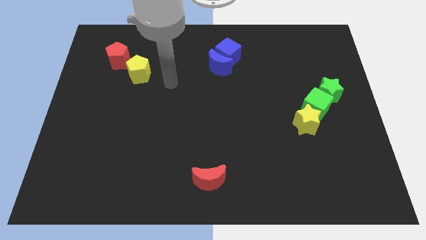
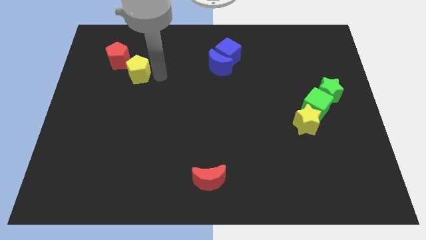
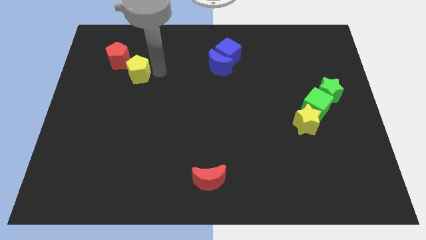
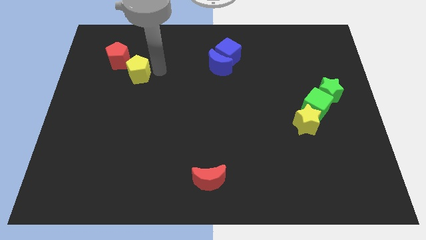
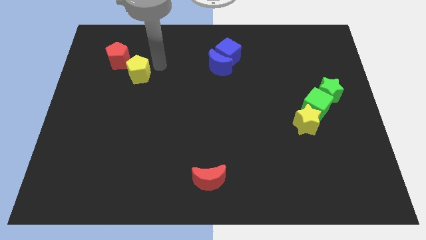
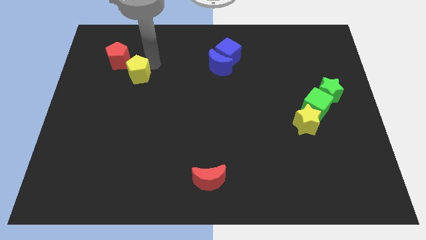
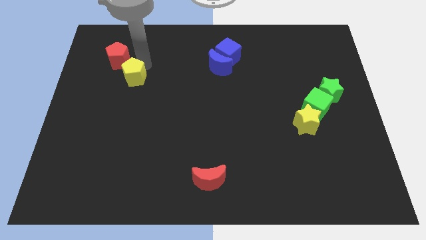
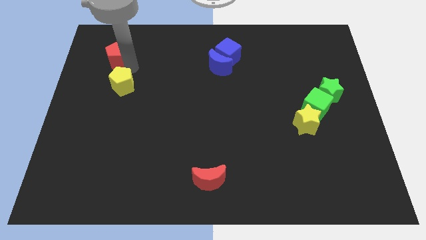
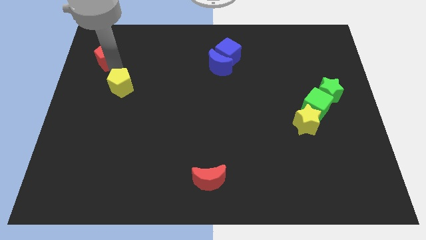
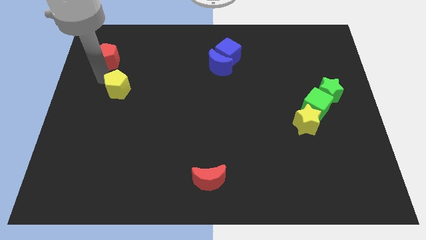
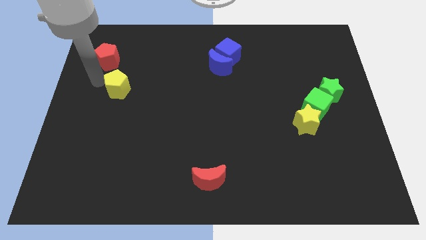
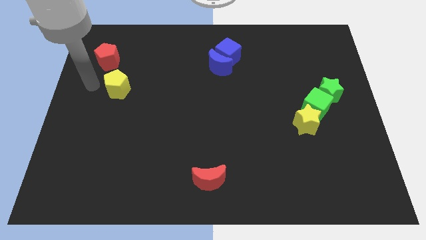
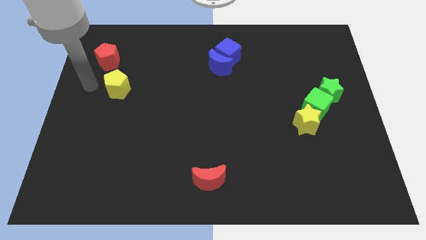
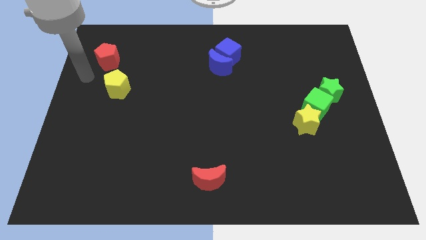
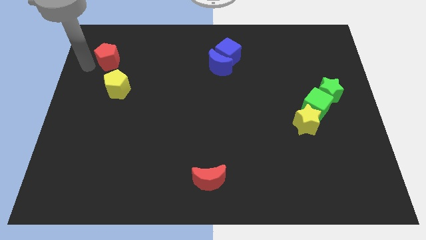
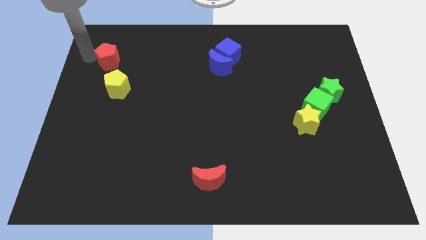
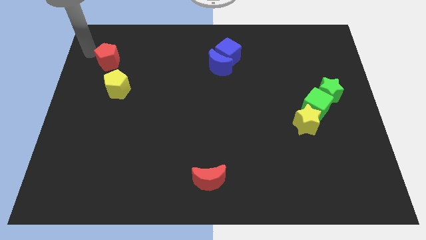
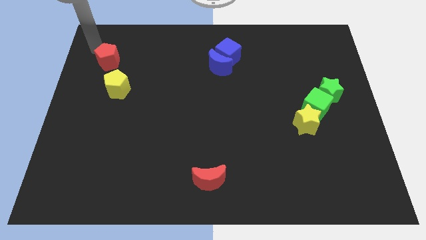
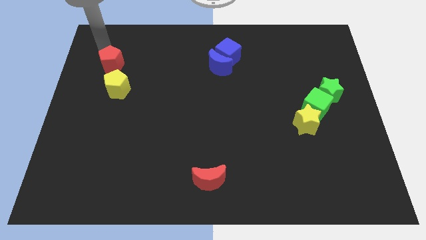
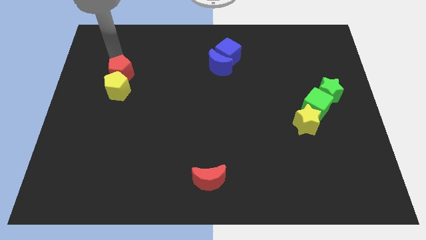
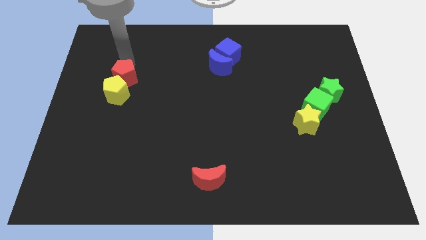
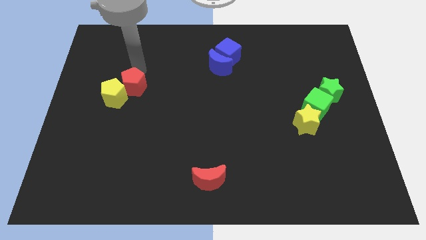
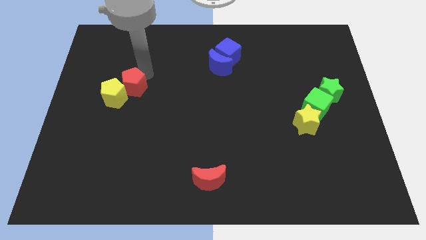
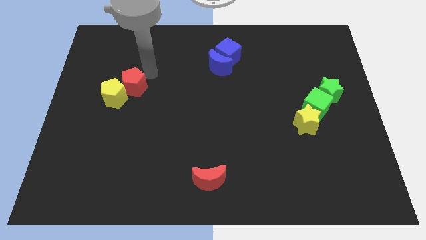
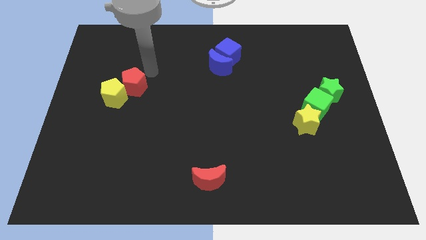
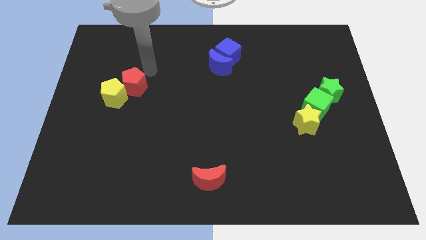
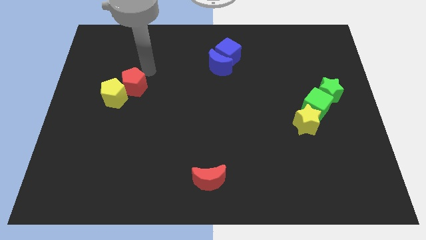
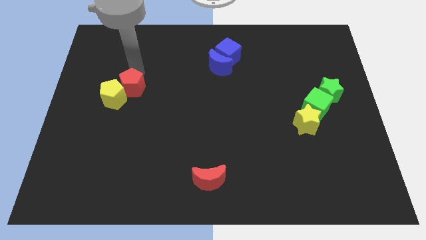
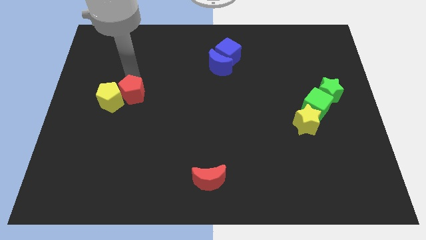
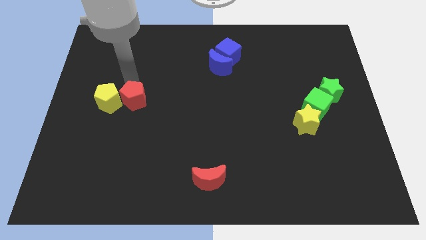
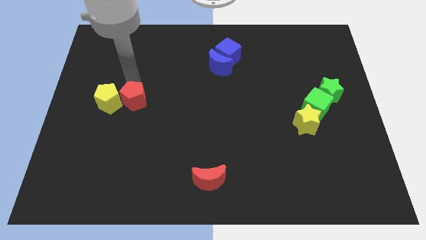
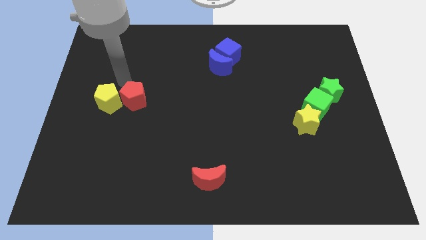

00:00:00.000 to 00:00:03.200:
push the red pentagon to the right side of the yellow pentagon

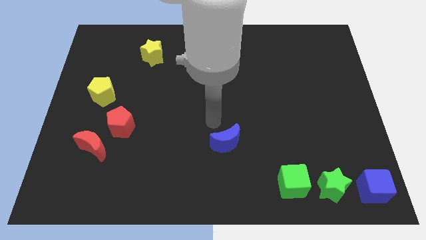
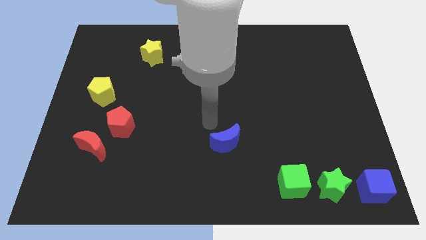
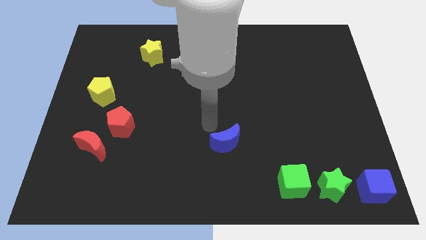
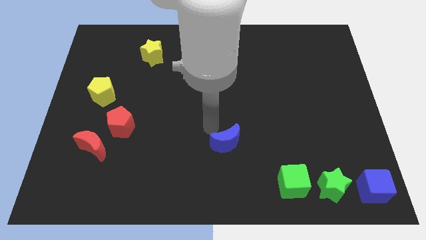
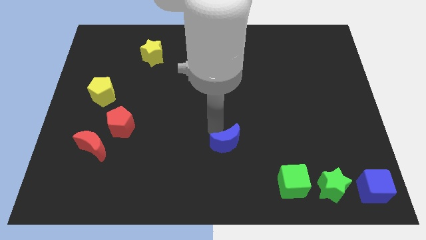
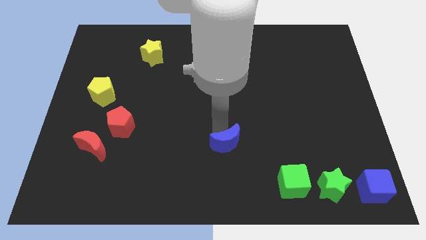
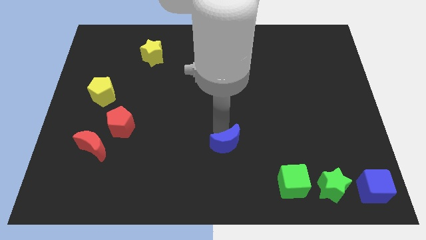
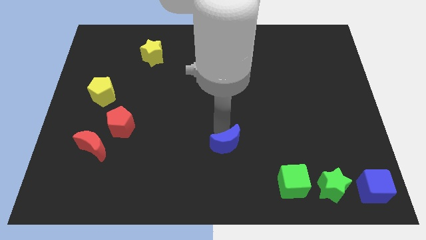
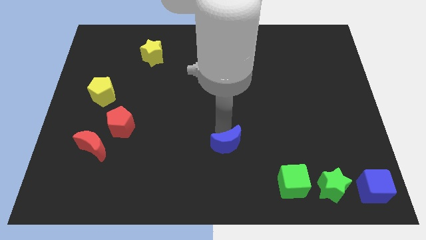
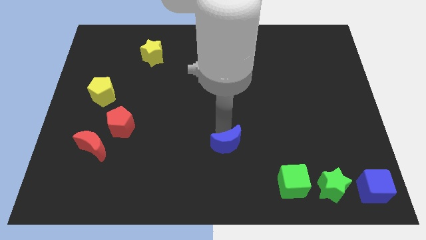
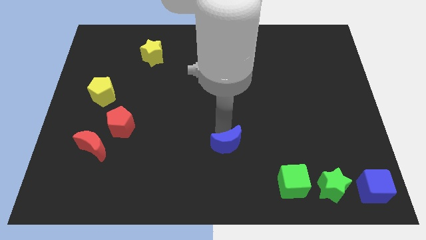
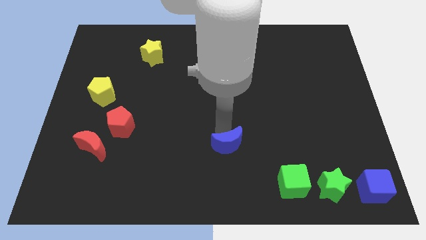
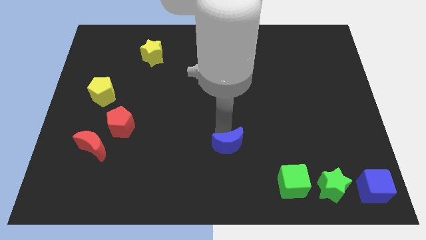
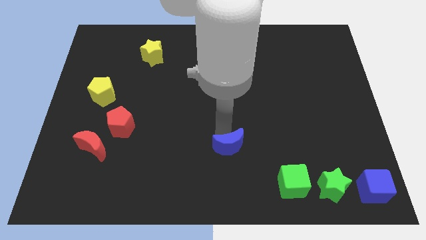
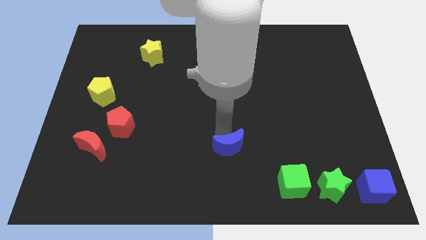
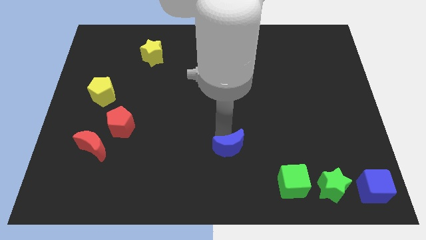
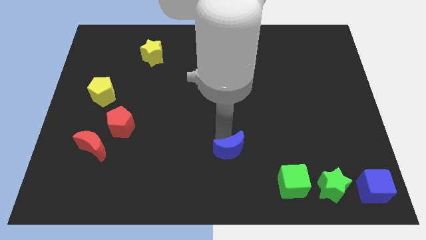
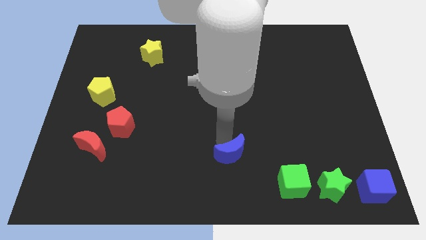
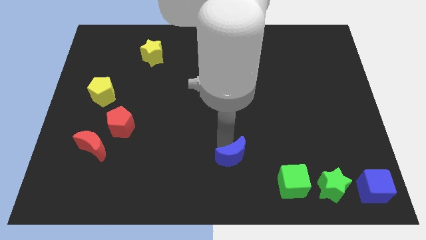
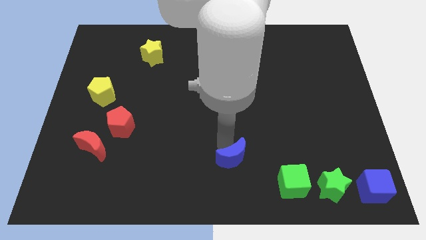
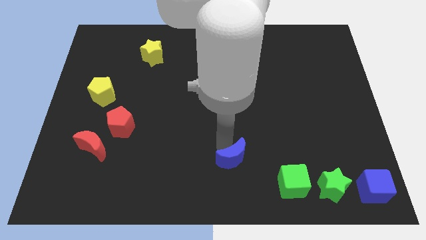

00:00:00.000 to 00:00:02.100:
push the blue moon towards the bottom side of the board

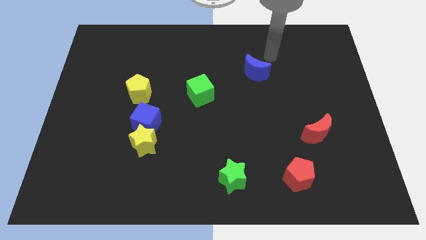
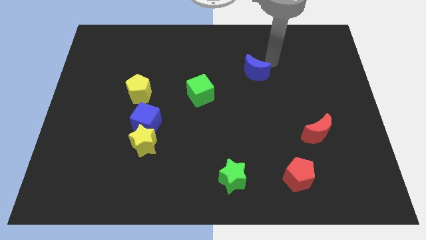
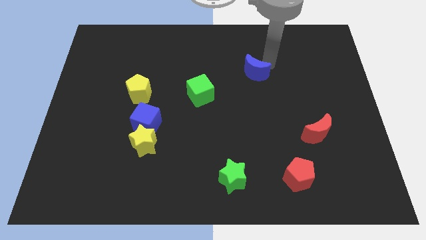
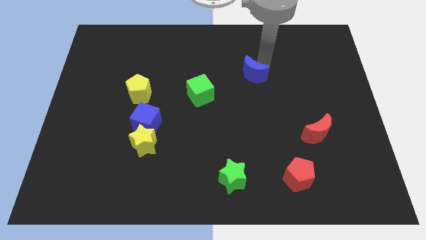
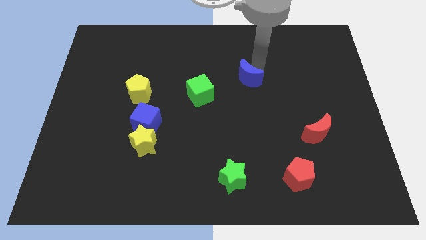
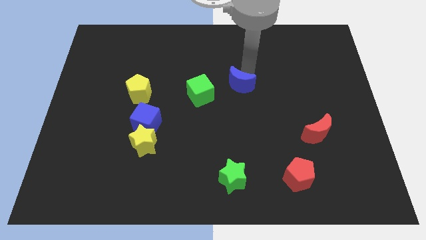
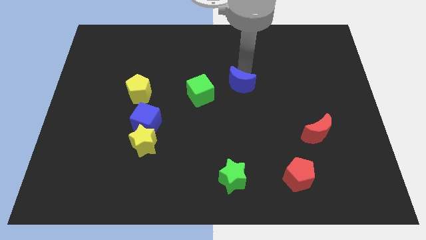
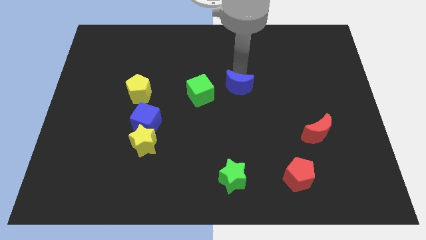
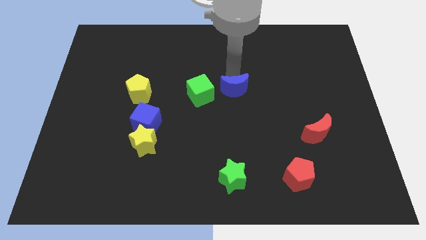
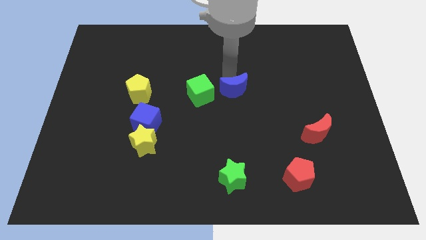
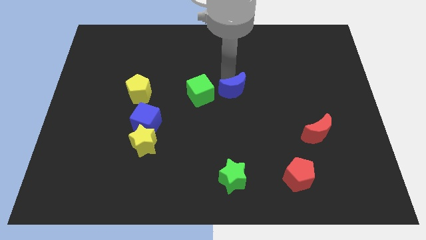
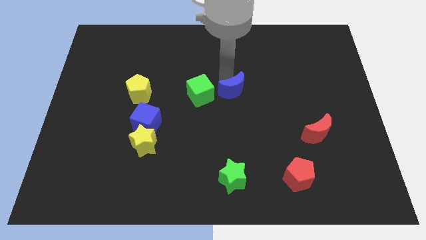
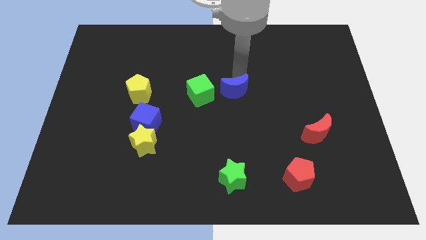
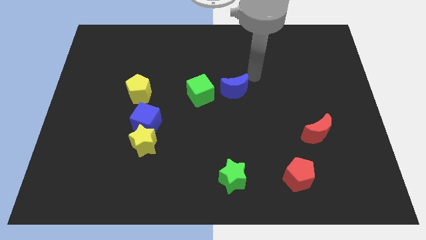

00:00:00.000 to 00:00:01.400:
move the blue crescent to the right of green cube

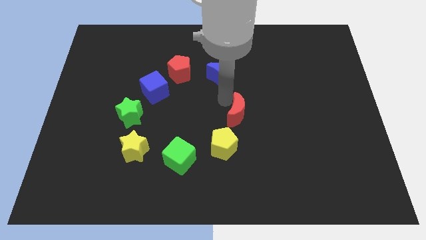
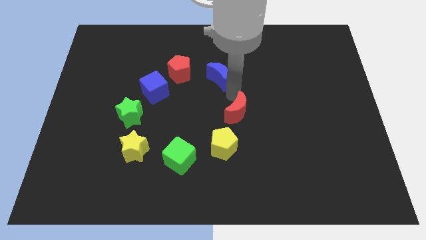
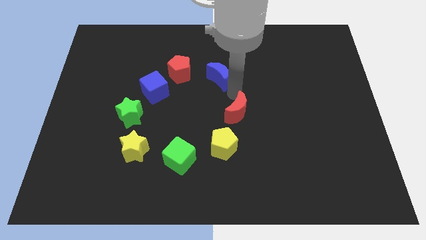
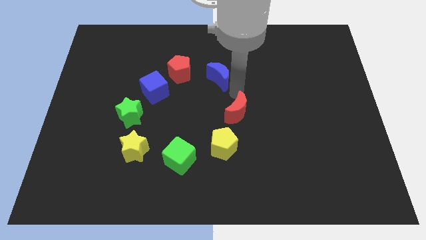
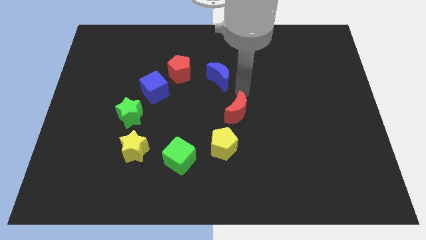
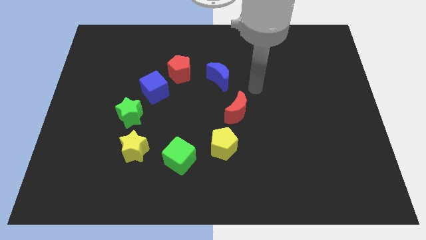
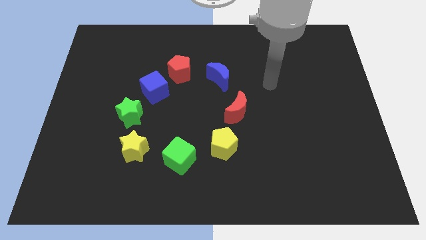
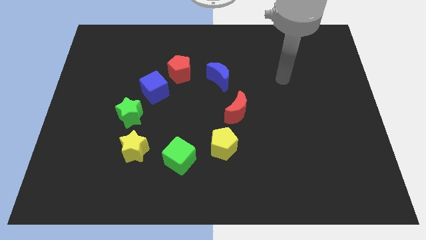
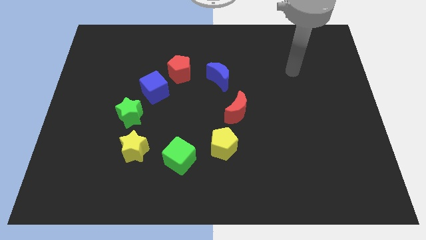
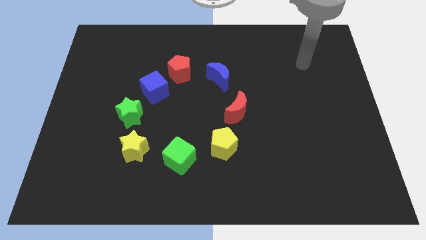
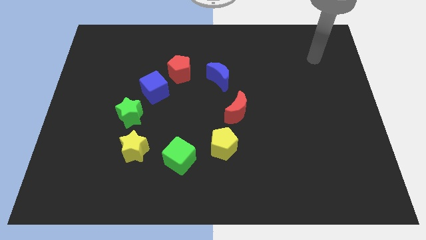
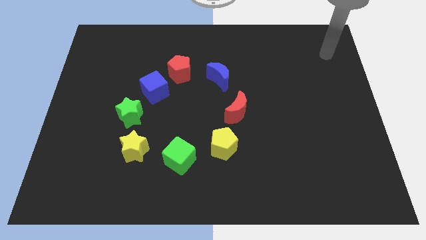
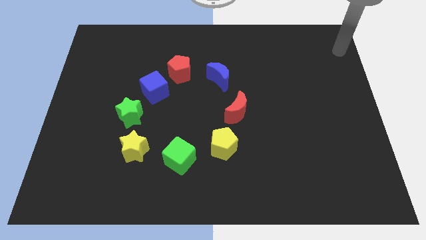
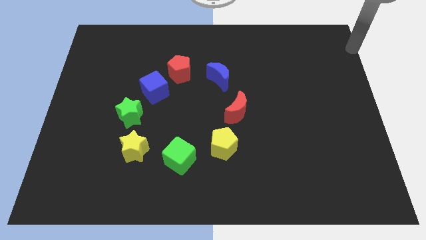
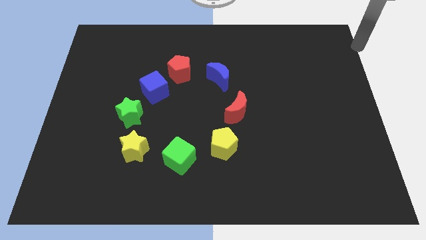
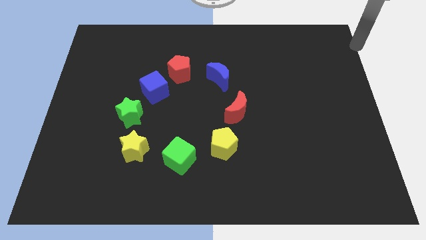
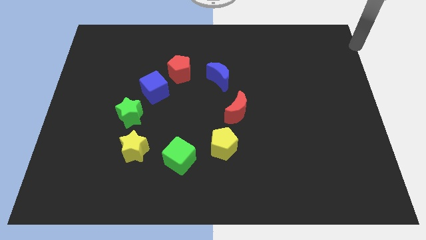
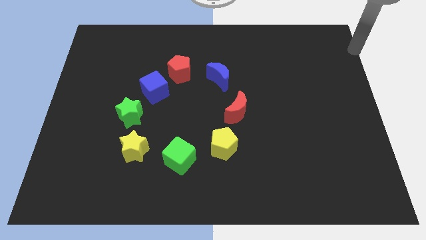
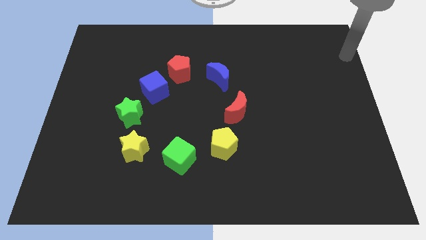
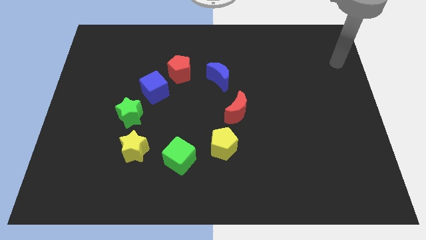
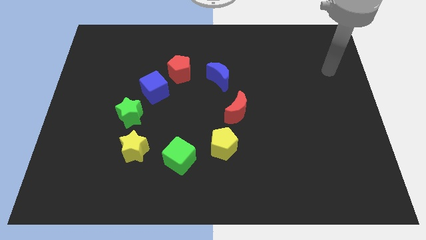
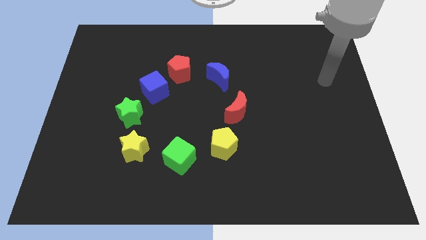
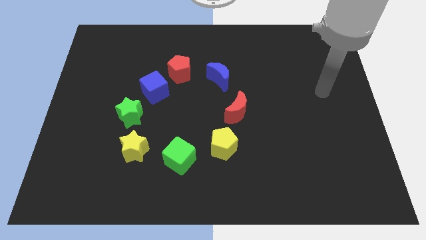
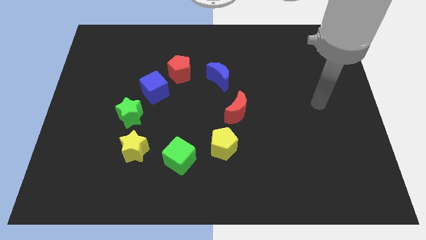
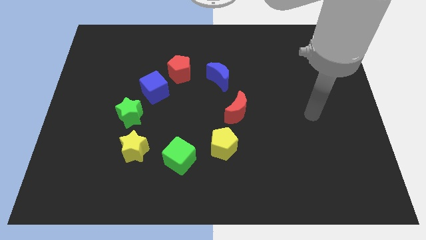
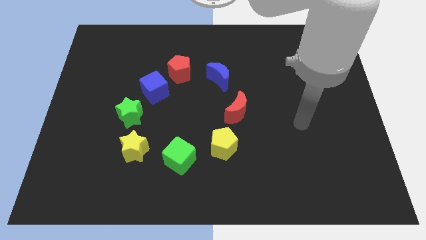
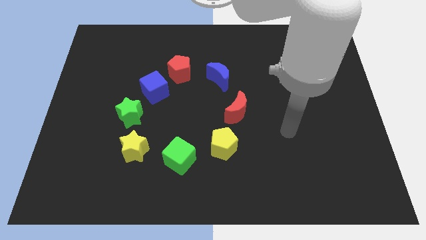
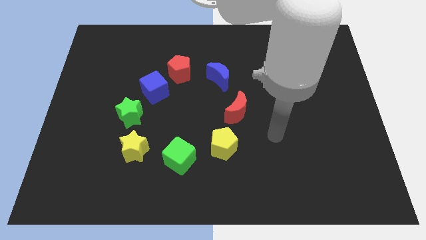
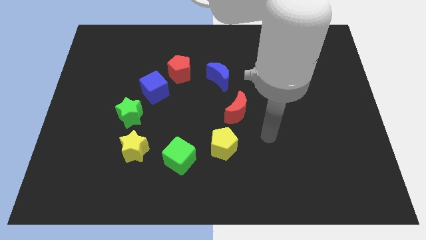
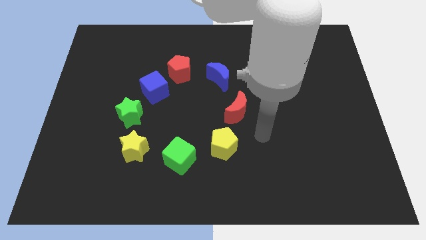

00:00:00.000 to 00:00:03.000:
move your arm away from the red moon
